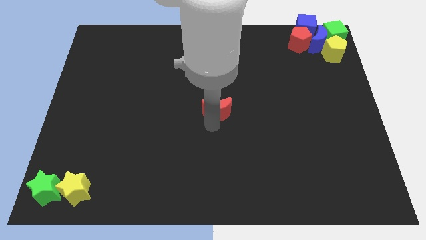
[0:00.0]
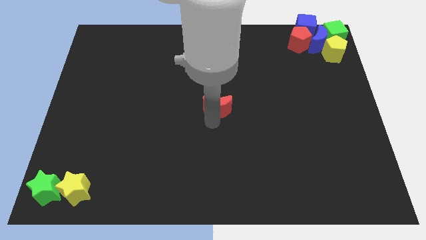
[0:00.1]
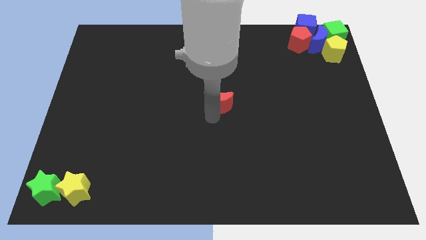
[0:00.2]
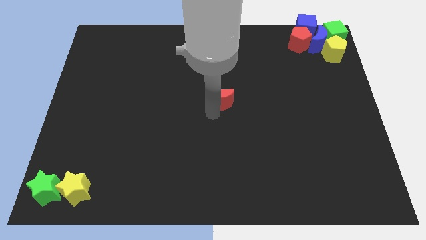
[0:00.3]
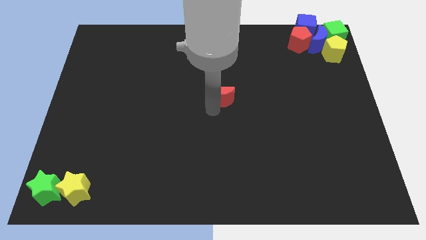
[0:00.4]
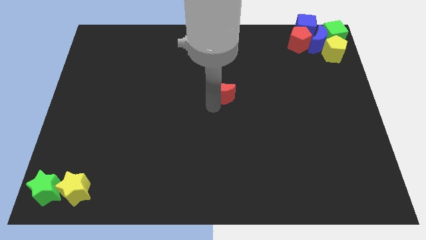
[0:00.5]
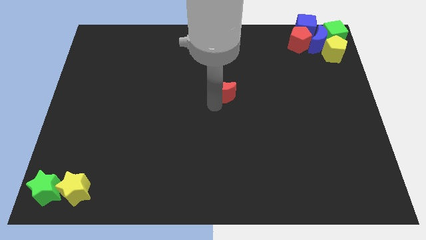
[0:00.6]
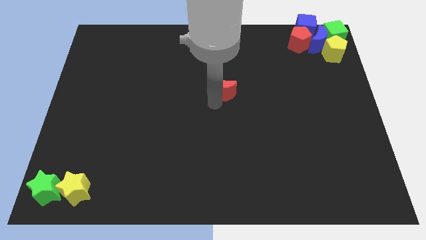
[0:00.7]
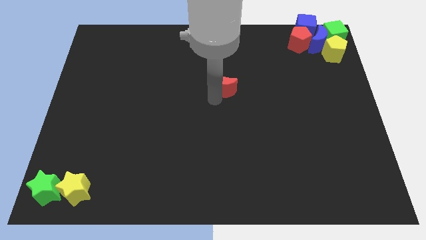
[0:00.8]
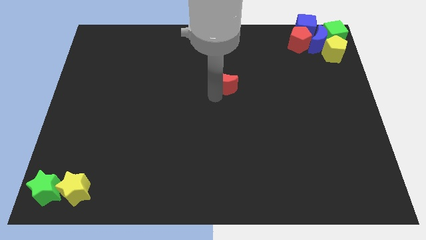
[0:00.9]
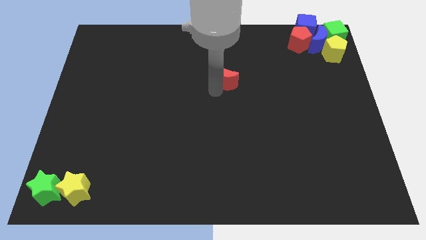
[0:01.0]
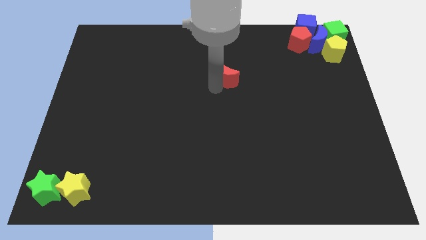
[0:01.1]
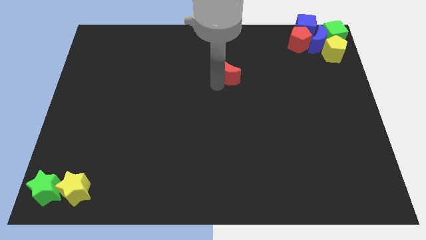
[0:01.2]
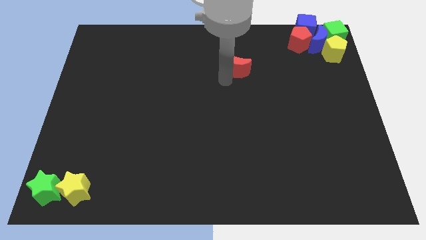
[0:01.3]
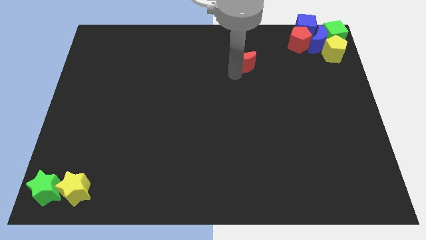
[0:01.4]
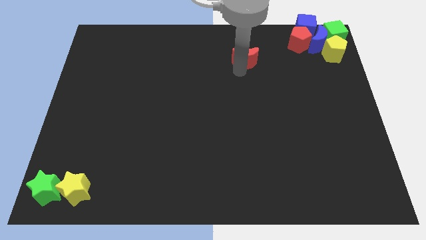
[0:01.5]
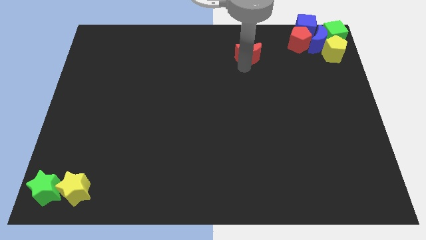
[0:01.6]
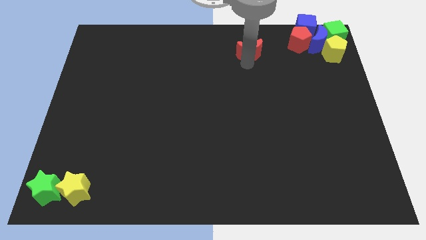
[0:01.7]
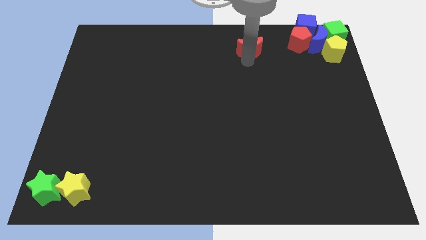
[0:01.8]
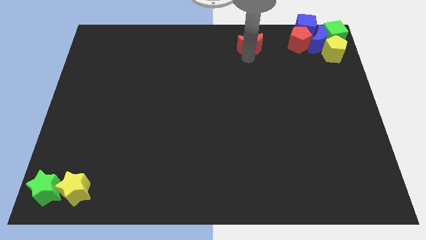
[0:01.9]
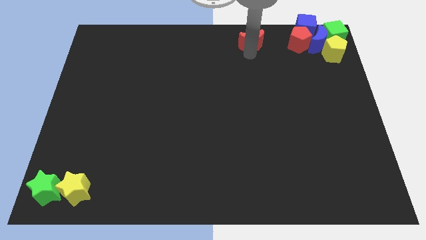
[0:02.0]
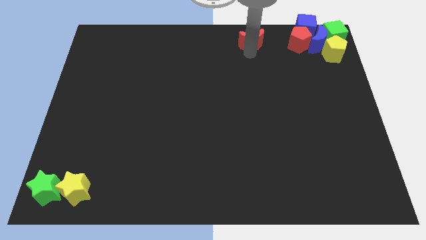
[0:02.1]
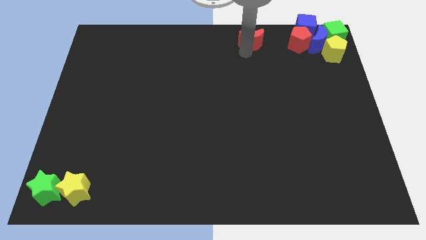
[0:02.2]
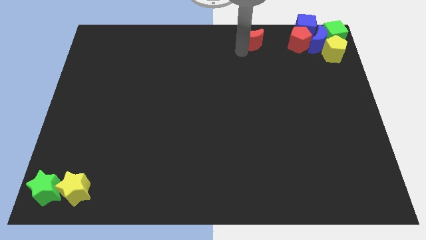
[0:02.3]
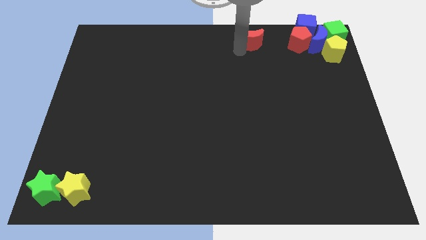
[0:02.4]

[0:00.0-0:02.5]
push red moon to the top

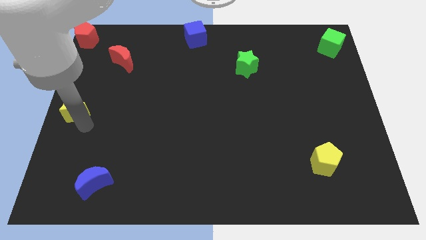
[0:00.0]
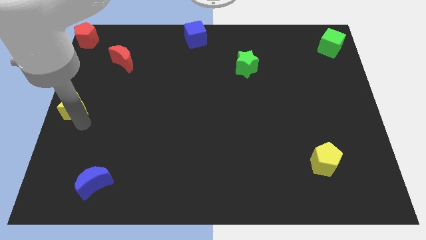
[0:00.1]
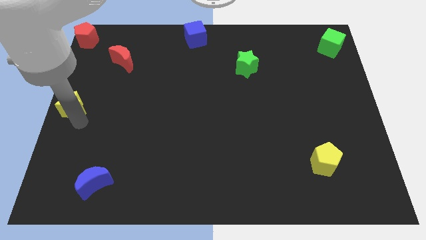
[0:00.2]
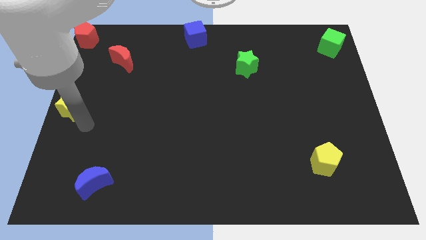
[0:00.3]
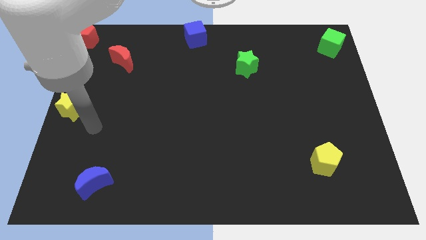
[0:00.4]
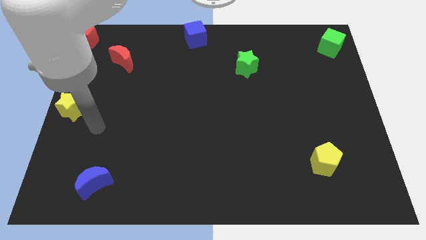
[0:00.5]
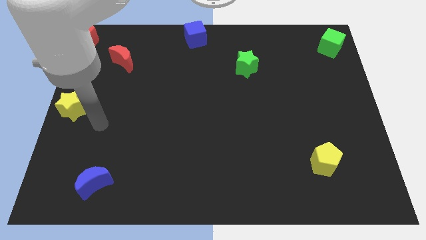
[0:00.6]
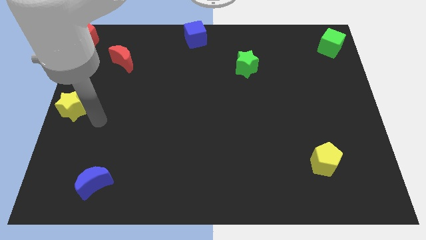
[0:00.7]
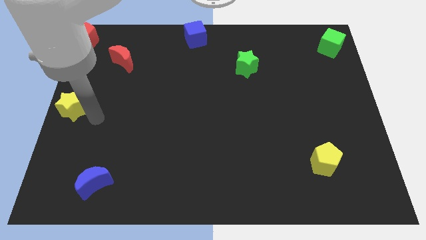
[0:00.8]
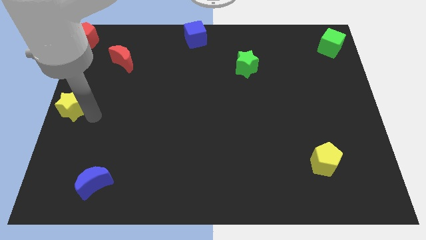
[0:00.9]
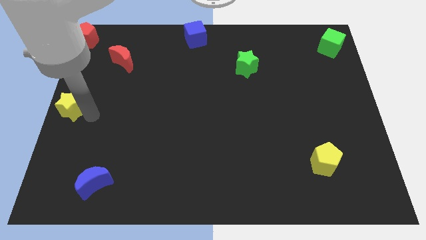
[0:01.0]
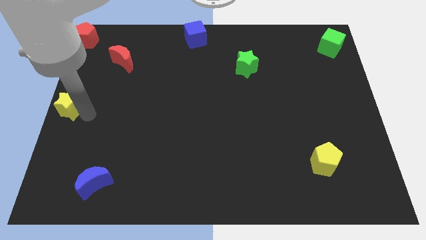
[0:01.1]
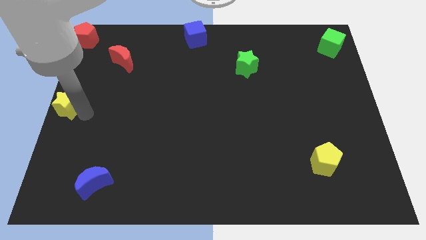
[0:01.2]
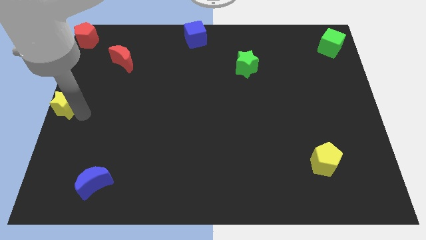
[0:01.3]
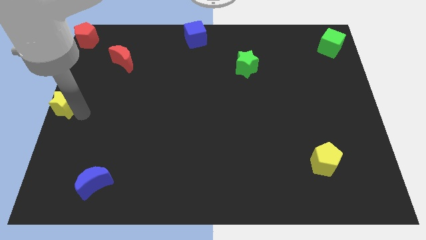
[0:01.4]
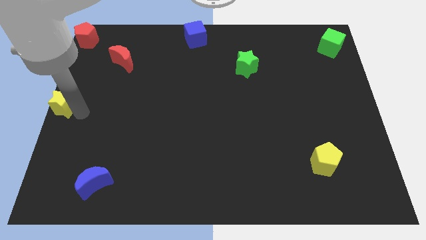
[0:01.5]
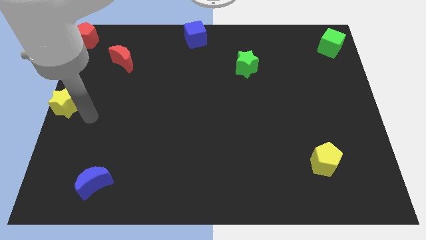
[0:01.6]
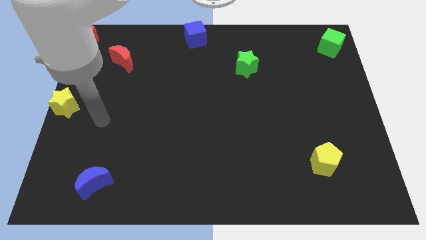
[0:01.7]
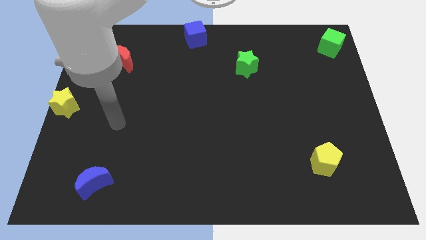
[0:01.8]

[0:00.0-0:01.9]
place the yellow star at the center left of the board

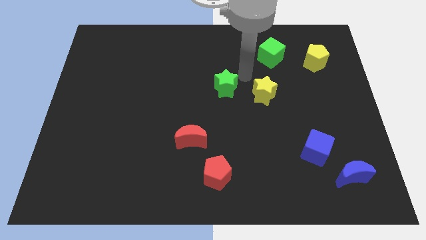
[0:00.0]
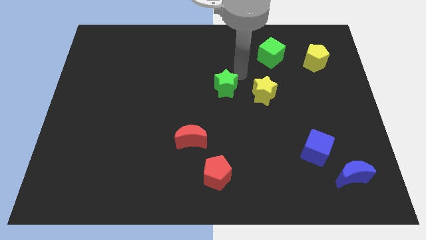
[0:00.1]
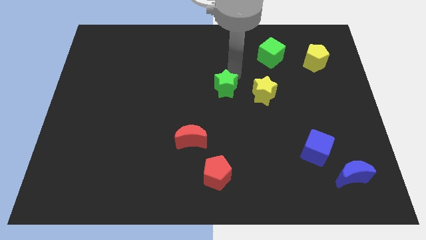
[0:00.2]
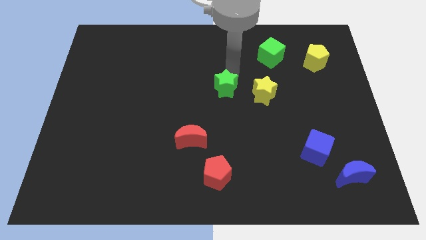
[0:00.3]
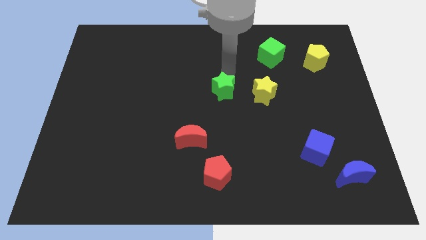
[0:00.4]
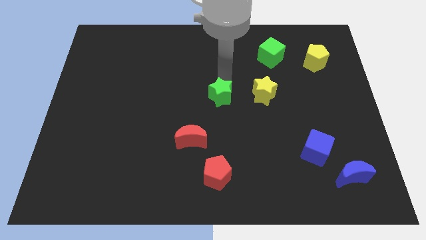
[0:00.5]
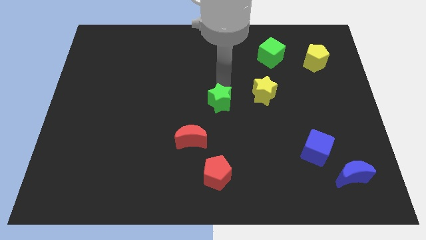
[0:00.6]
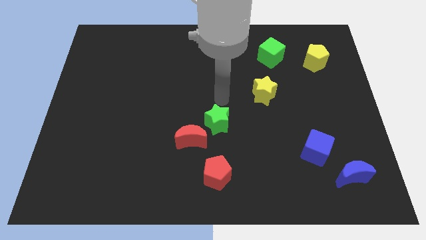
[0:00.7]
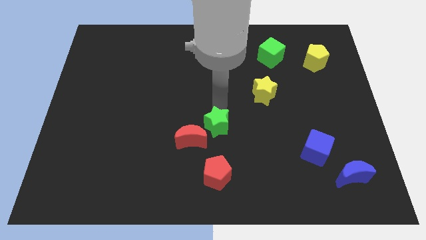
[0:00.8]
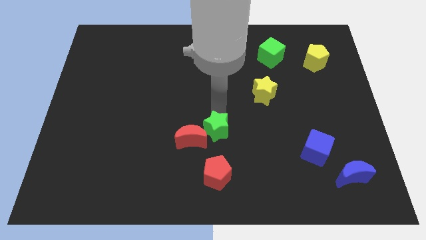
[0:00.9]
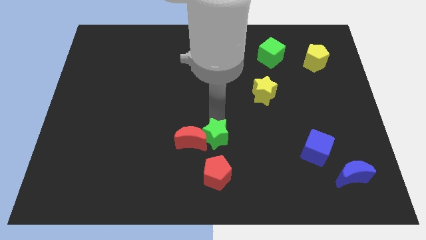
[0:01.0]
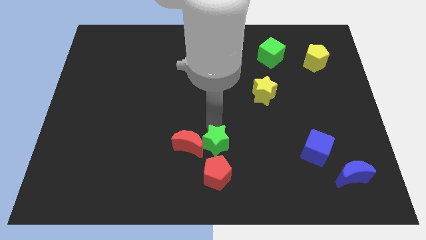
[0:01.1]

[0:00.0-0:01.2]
push the green star into red crescent

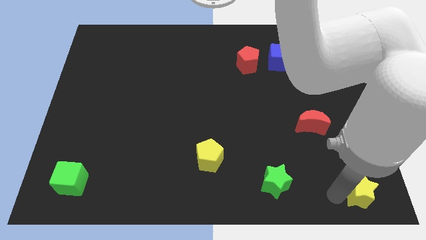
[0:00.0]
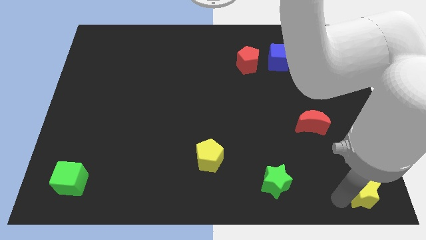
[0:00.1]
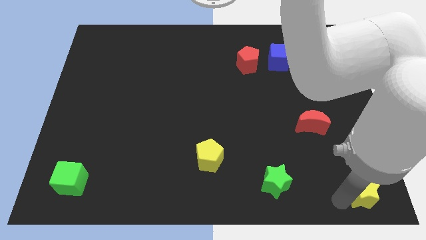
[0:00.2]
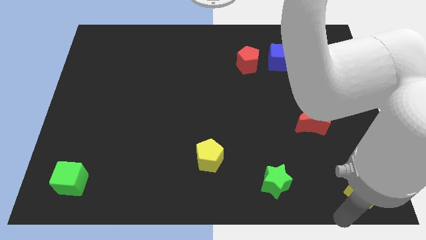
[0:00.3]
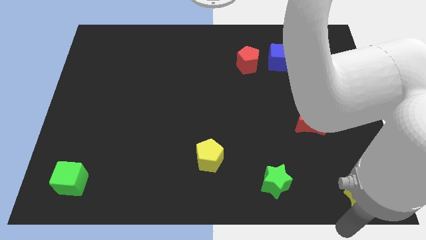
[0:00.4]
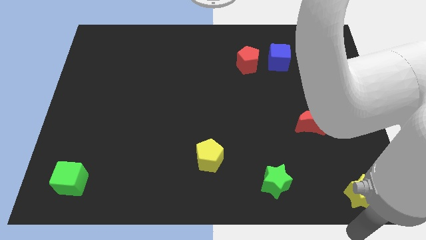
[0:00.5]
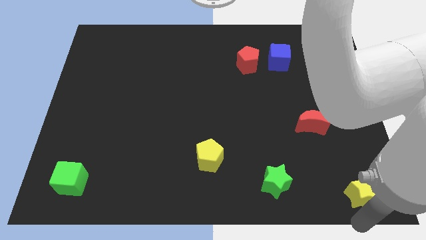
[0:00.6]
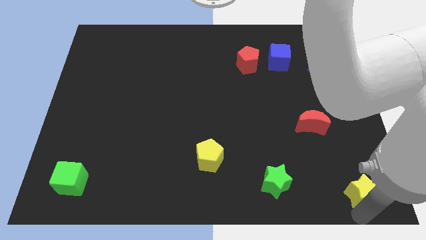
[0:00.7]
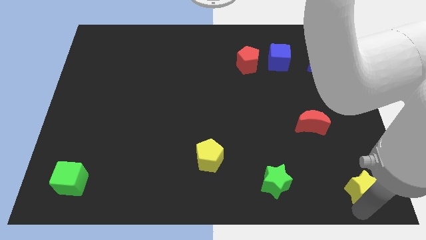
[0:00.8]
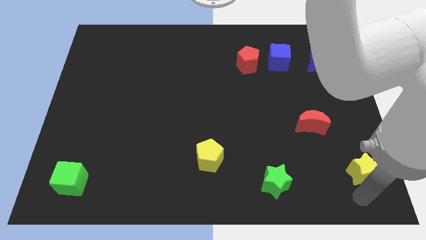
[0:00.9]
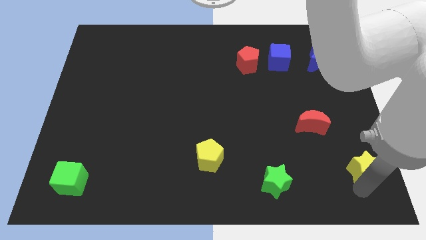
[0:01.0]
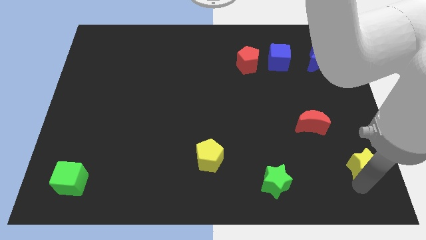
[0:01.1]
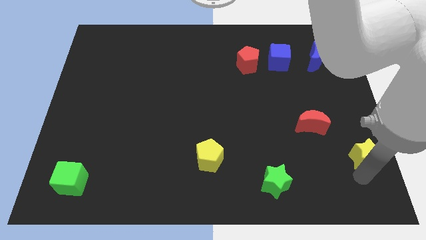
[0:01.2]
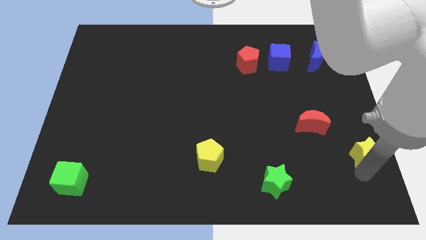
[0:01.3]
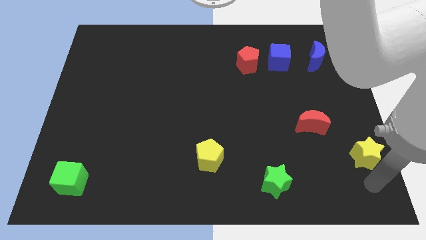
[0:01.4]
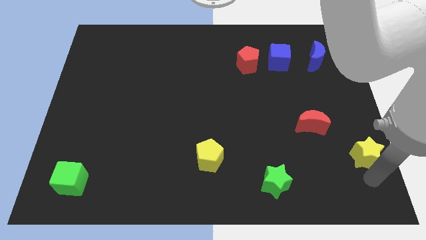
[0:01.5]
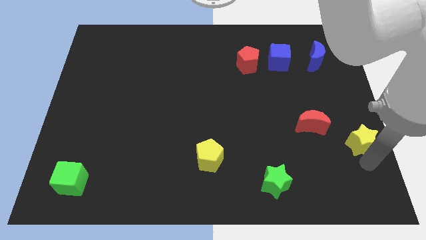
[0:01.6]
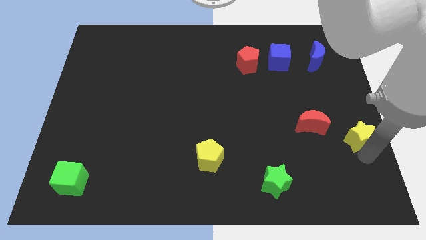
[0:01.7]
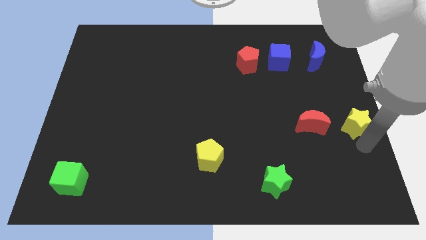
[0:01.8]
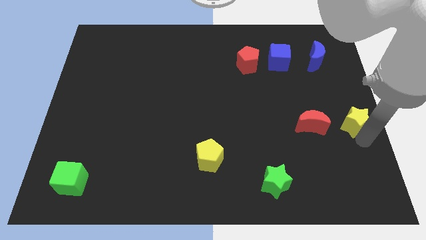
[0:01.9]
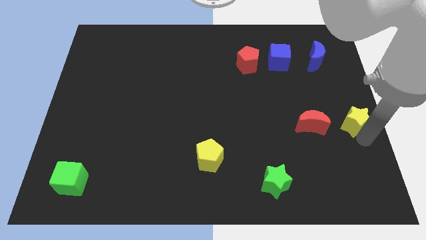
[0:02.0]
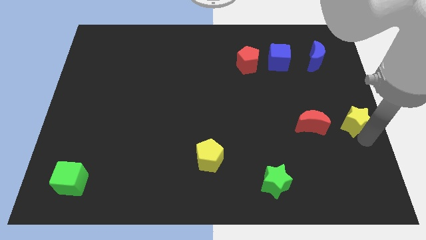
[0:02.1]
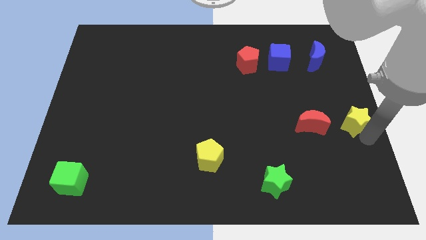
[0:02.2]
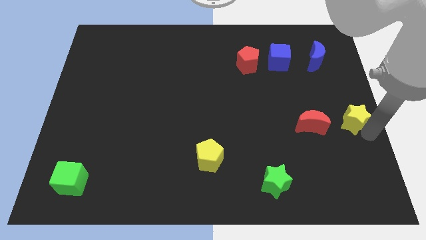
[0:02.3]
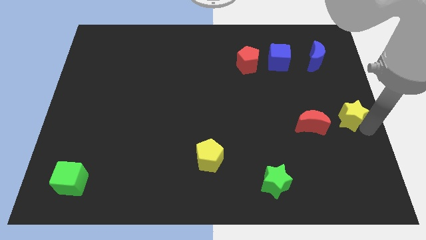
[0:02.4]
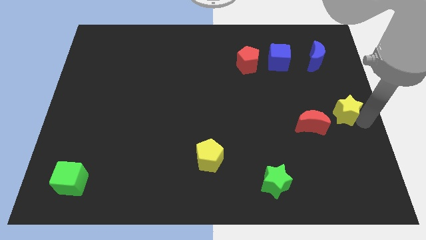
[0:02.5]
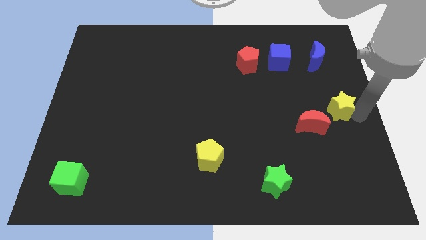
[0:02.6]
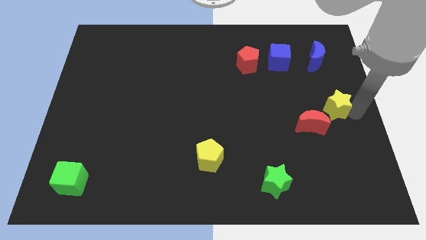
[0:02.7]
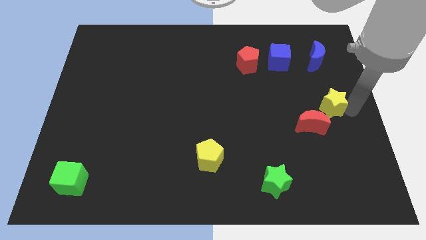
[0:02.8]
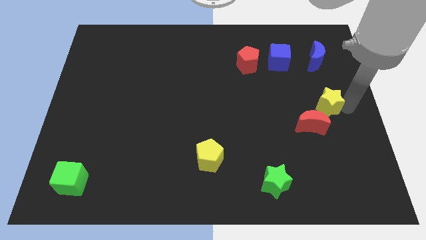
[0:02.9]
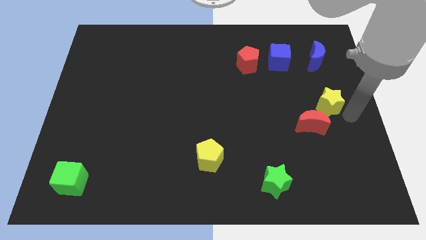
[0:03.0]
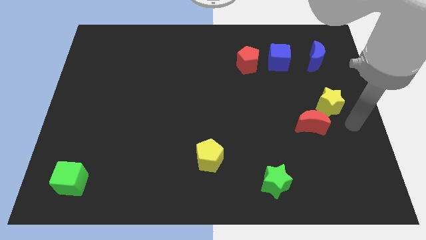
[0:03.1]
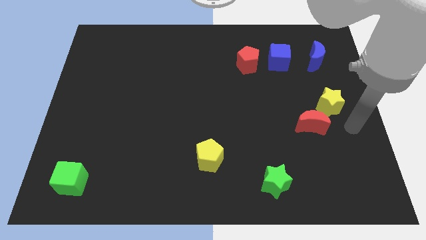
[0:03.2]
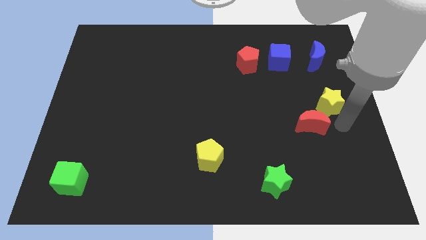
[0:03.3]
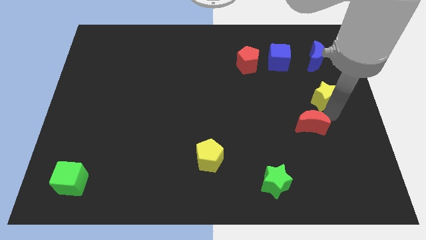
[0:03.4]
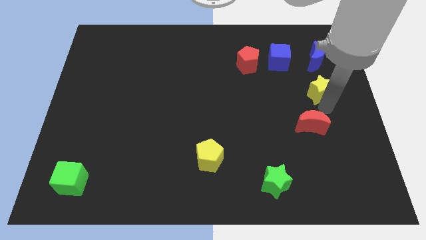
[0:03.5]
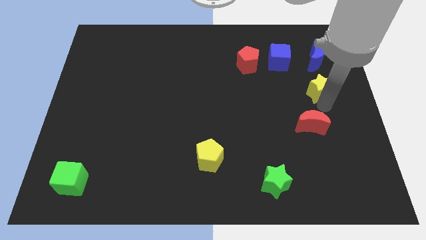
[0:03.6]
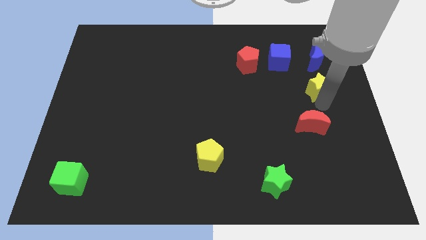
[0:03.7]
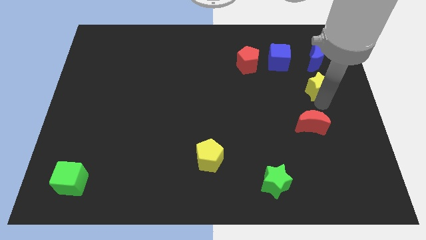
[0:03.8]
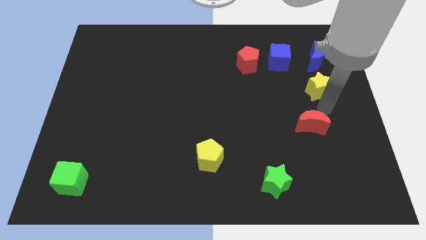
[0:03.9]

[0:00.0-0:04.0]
move the yellow star bottom to the blue crescent
